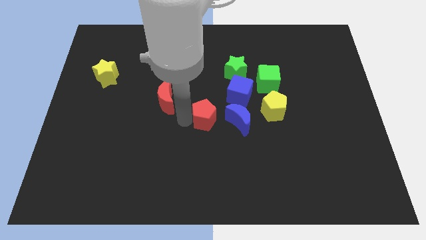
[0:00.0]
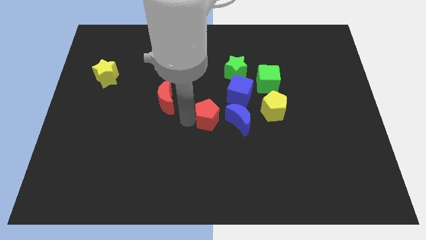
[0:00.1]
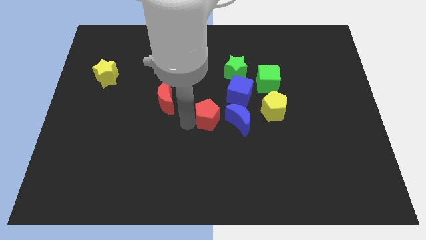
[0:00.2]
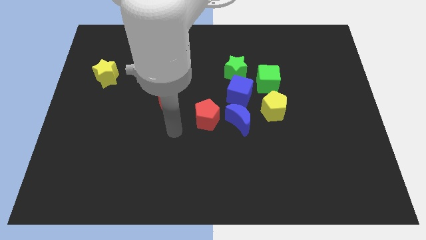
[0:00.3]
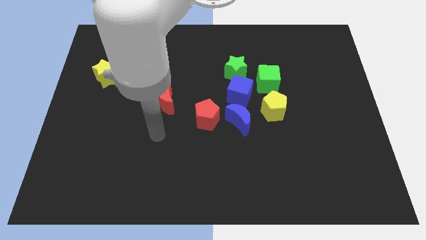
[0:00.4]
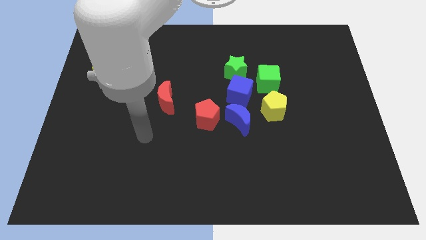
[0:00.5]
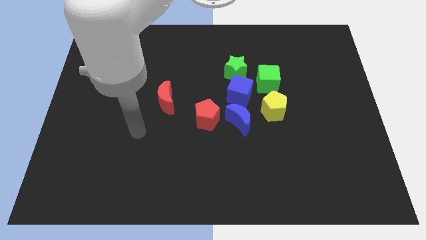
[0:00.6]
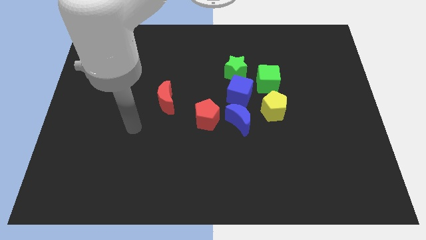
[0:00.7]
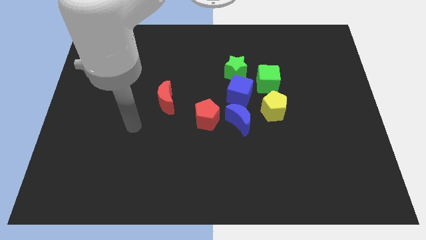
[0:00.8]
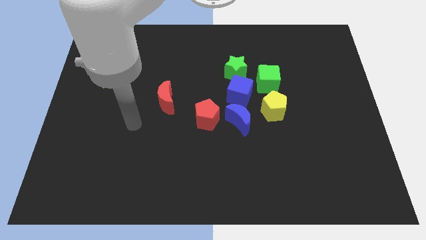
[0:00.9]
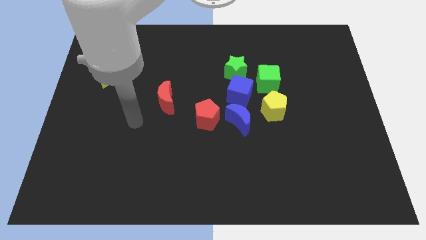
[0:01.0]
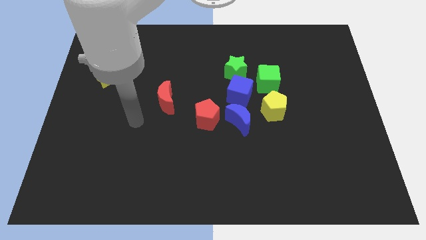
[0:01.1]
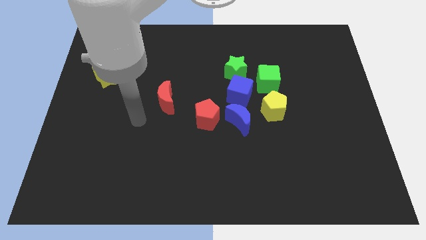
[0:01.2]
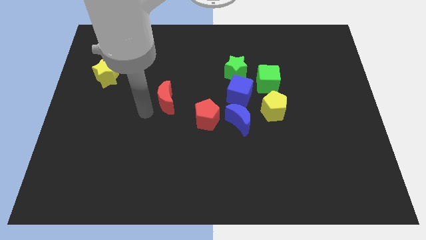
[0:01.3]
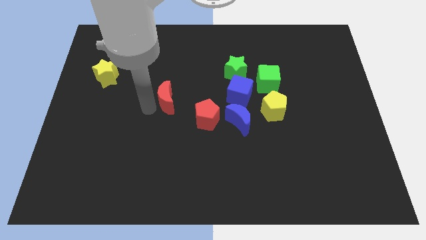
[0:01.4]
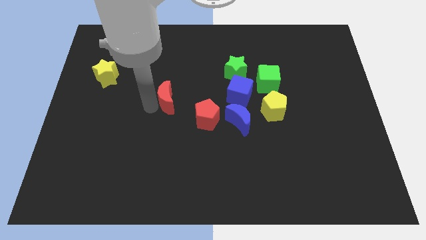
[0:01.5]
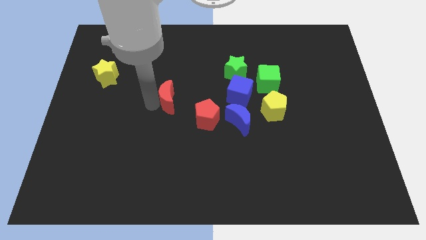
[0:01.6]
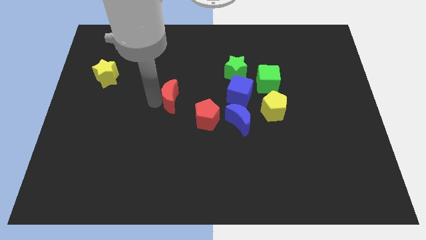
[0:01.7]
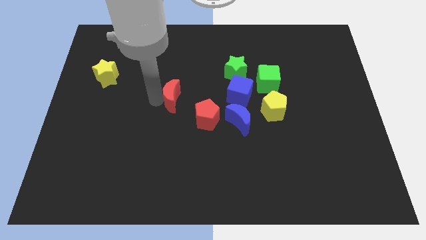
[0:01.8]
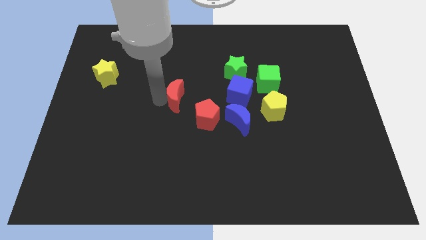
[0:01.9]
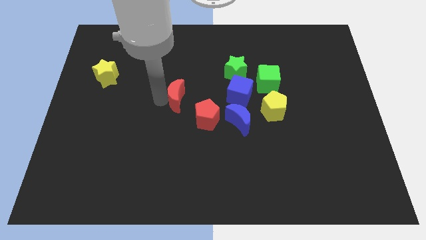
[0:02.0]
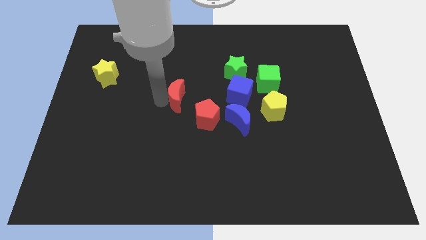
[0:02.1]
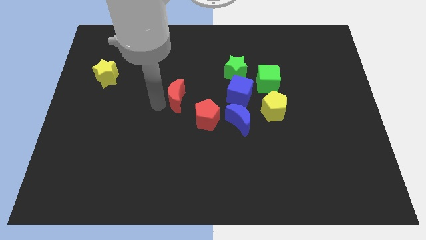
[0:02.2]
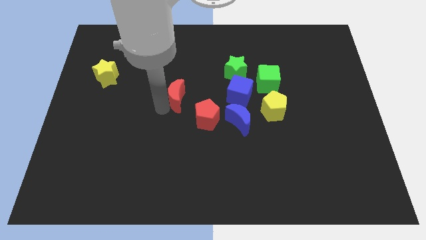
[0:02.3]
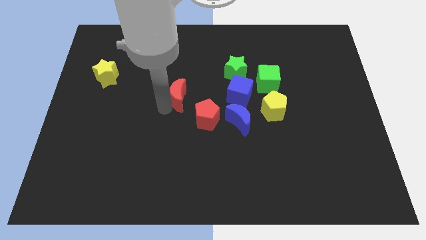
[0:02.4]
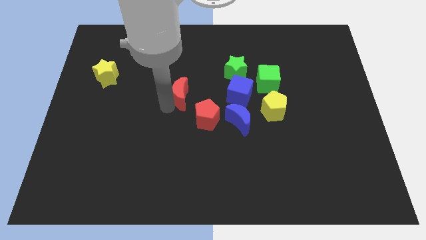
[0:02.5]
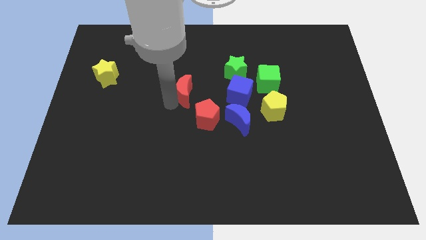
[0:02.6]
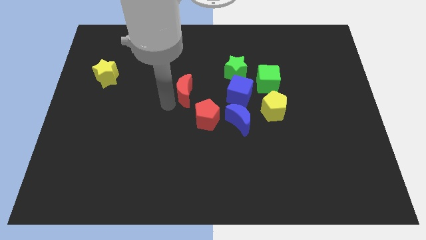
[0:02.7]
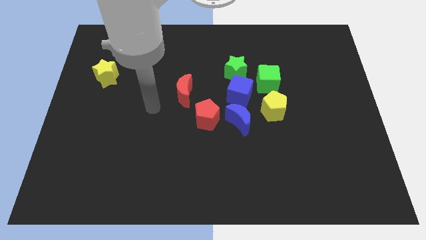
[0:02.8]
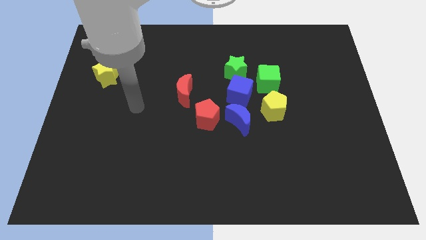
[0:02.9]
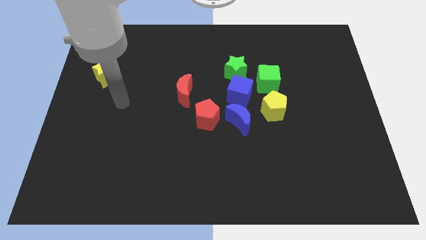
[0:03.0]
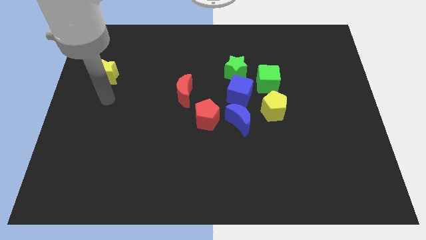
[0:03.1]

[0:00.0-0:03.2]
place the red moon diagonally above the top left side of the red pentagon

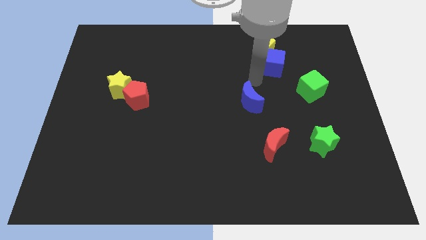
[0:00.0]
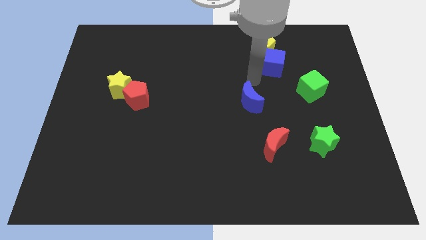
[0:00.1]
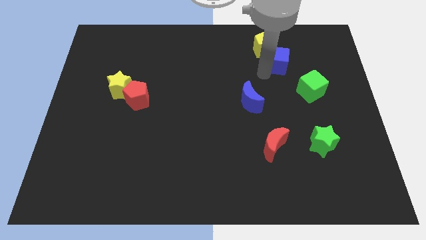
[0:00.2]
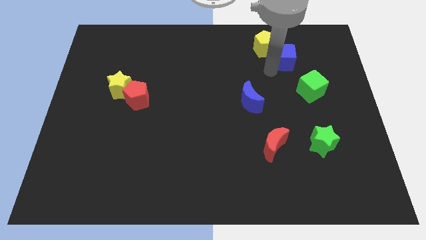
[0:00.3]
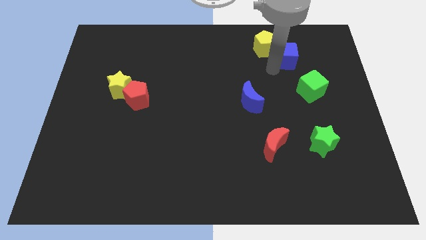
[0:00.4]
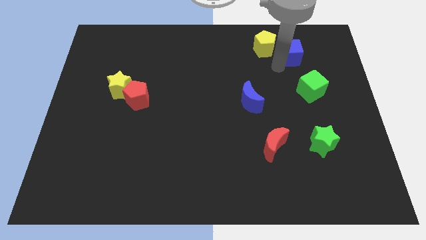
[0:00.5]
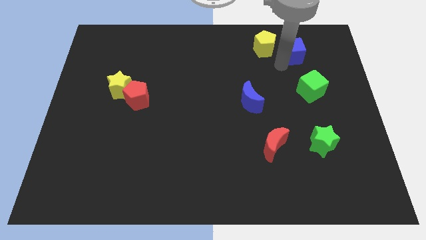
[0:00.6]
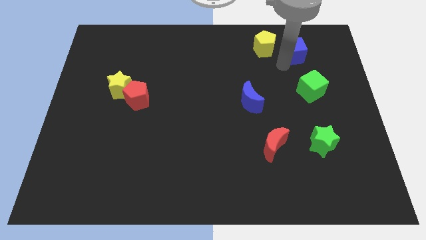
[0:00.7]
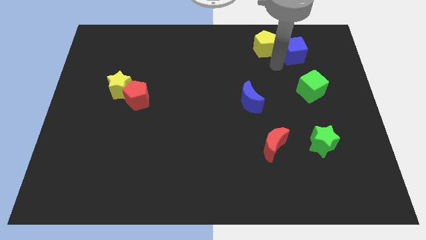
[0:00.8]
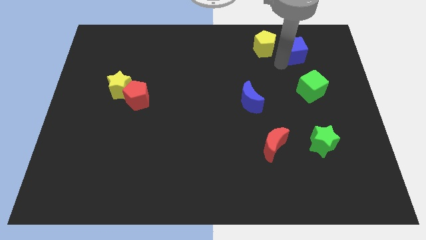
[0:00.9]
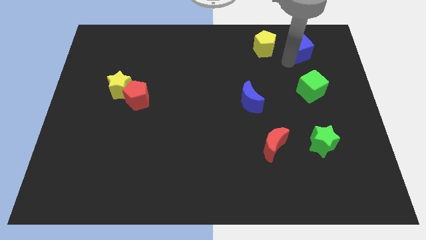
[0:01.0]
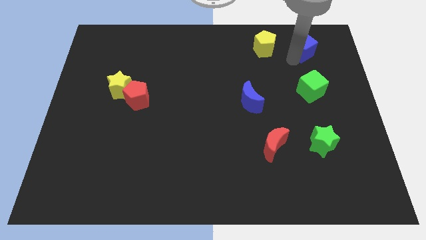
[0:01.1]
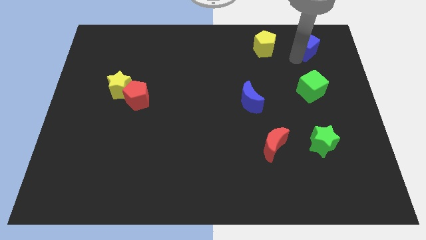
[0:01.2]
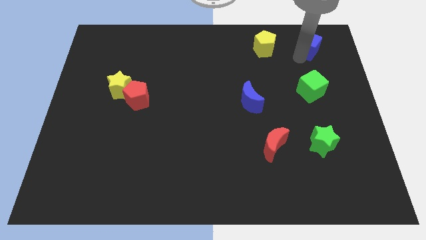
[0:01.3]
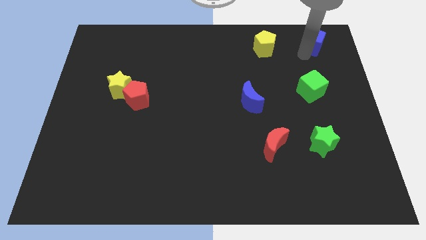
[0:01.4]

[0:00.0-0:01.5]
move blue cube to the corner of the board

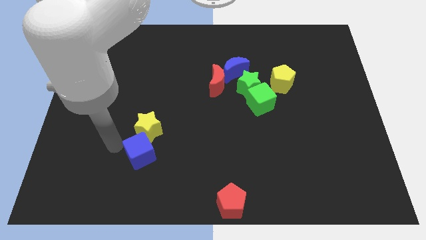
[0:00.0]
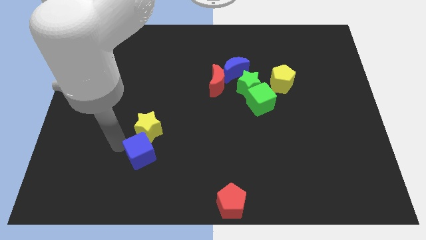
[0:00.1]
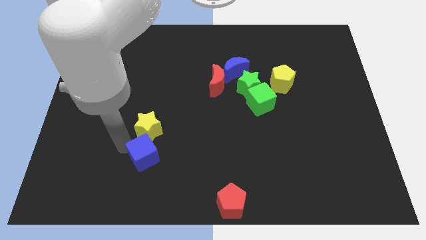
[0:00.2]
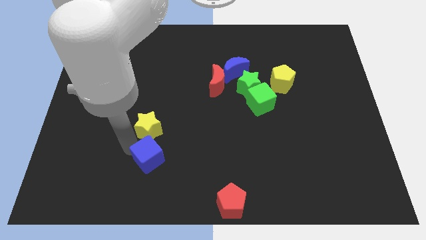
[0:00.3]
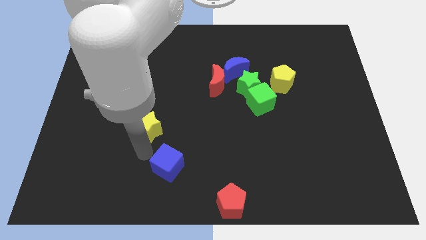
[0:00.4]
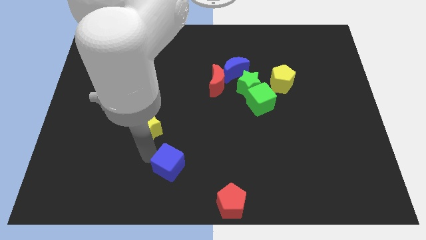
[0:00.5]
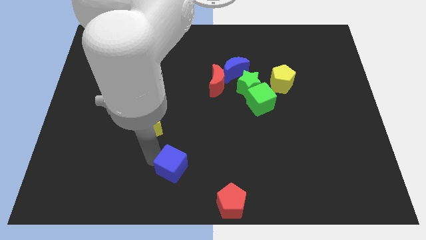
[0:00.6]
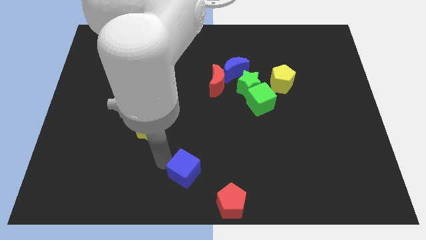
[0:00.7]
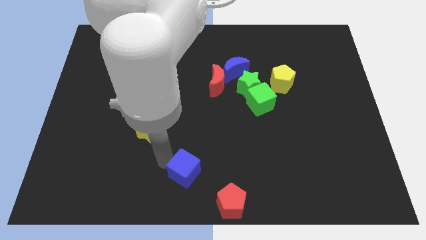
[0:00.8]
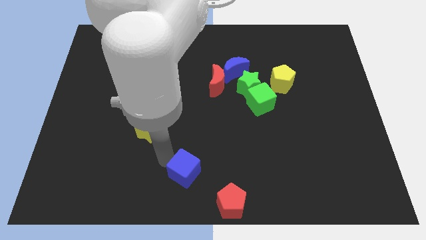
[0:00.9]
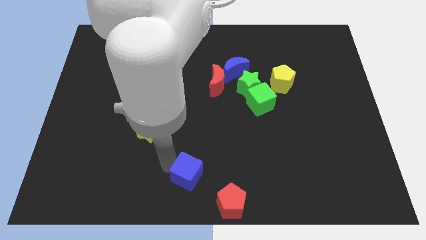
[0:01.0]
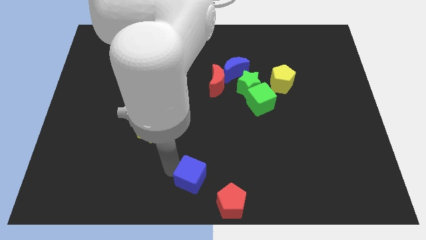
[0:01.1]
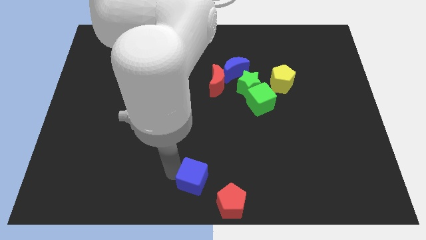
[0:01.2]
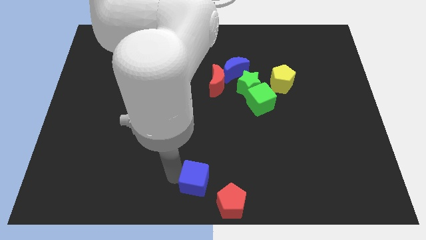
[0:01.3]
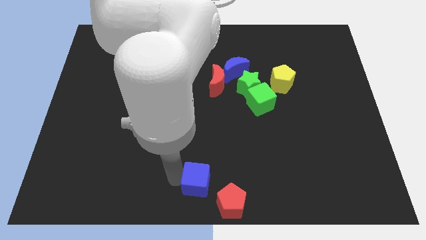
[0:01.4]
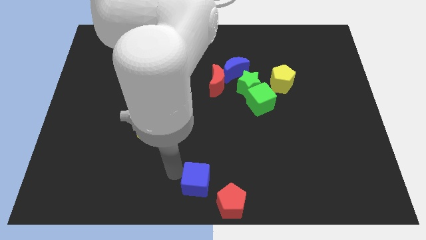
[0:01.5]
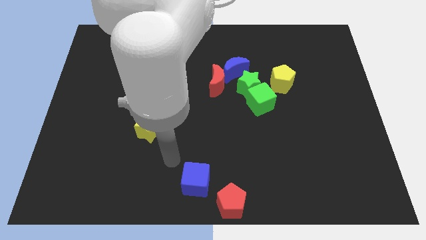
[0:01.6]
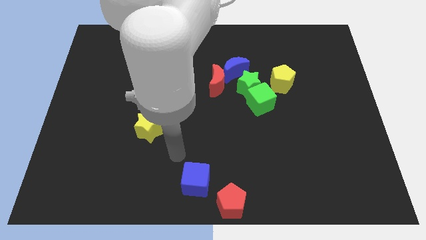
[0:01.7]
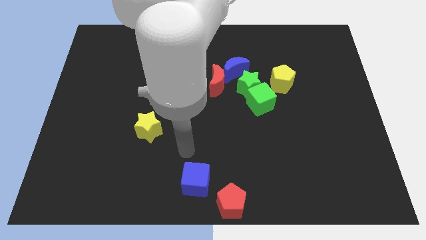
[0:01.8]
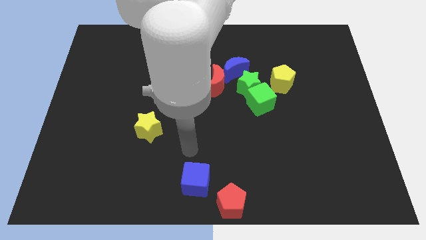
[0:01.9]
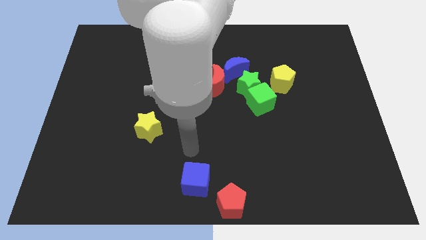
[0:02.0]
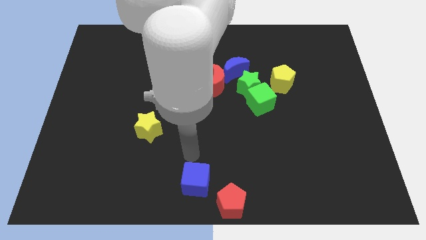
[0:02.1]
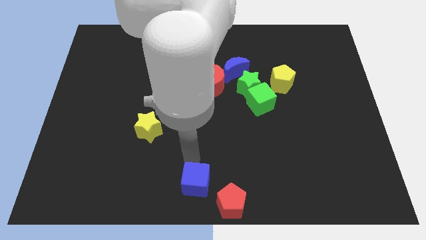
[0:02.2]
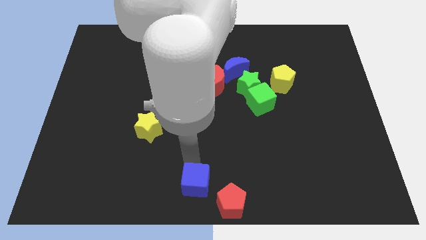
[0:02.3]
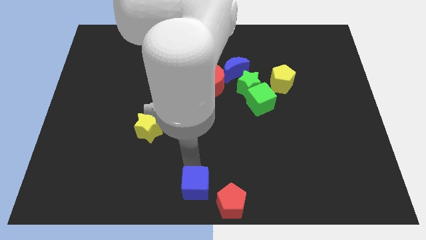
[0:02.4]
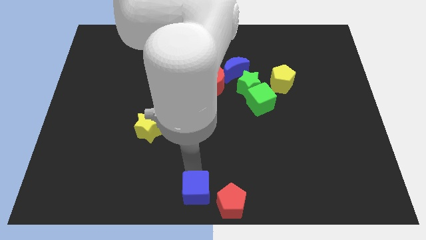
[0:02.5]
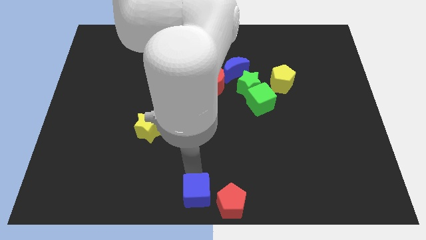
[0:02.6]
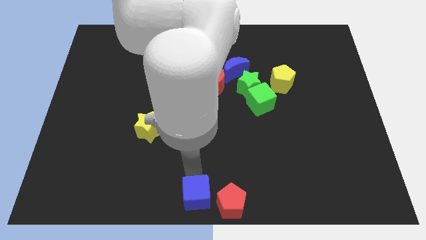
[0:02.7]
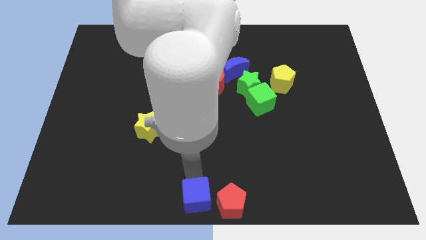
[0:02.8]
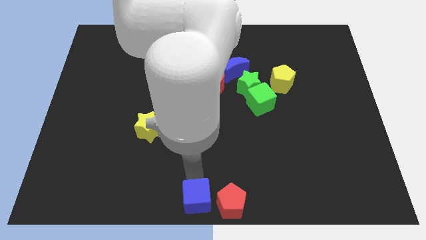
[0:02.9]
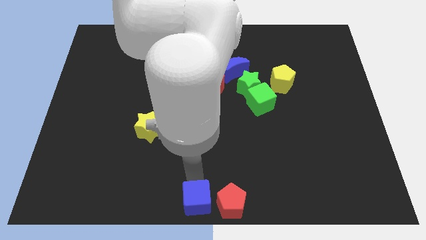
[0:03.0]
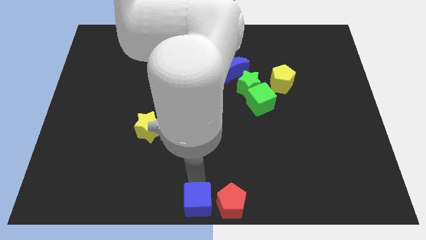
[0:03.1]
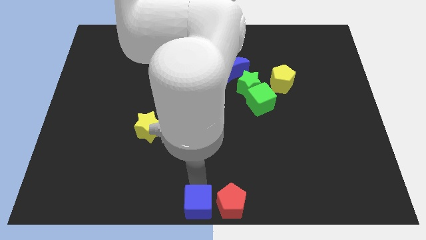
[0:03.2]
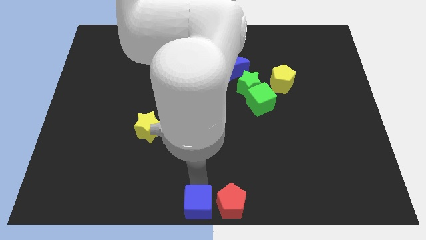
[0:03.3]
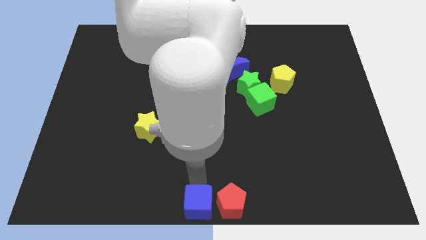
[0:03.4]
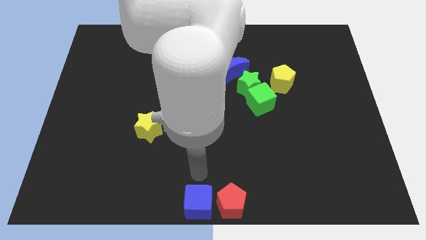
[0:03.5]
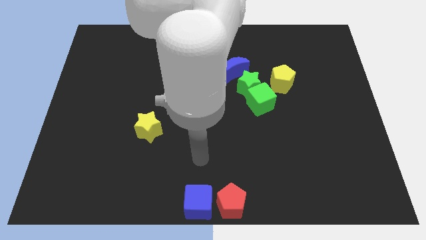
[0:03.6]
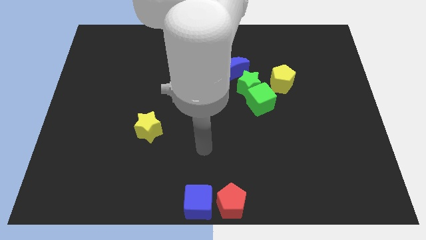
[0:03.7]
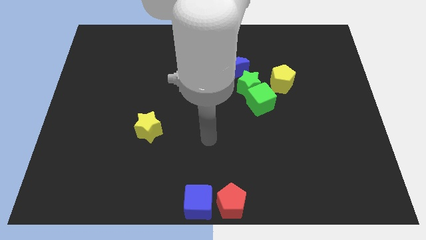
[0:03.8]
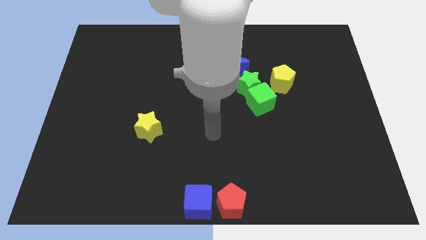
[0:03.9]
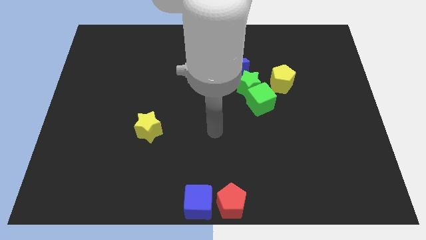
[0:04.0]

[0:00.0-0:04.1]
place blue cube to the left of red pentagon
